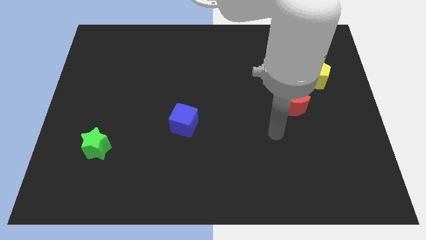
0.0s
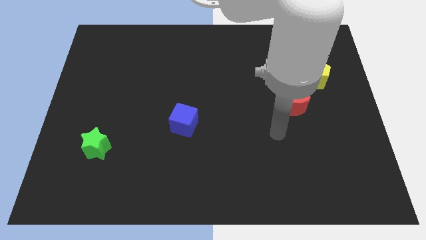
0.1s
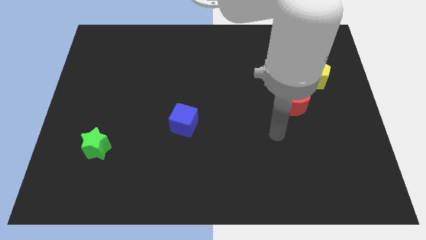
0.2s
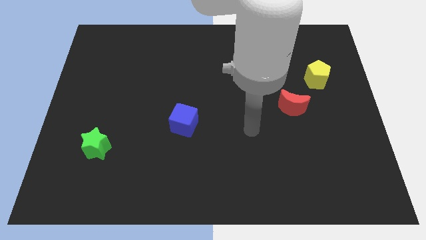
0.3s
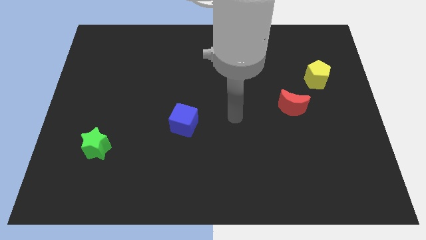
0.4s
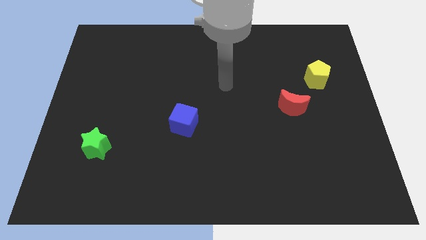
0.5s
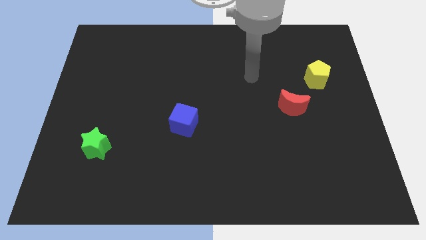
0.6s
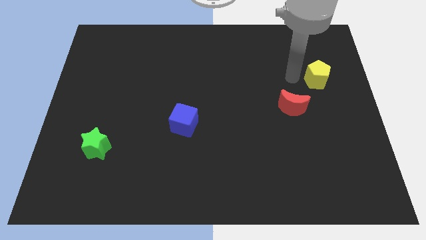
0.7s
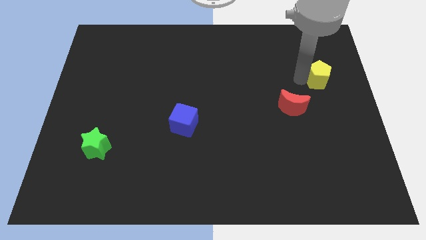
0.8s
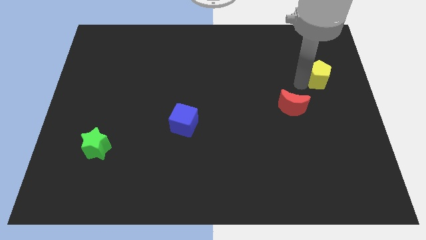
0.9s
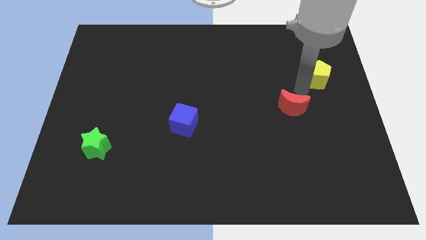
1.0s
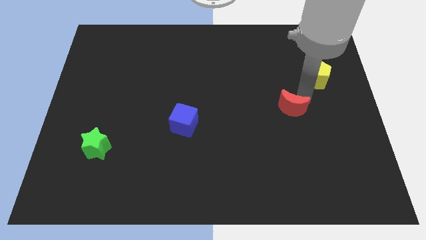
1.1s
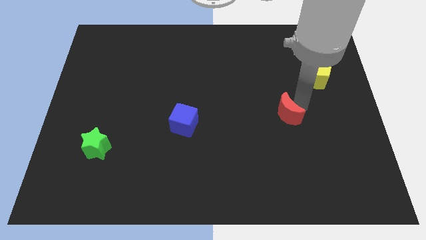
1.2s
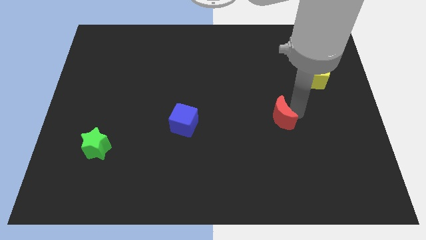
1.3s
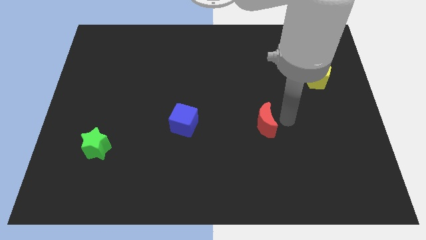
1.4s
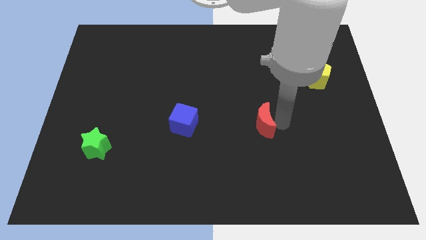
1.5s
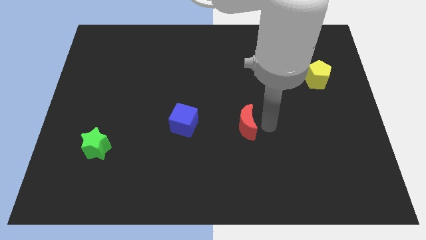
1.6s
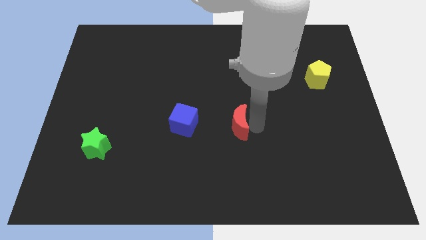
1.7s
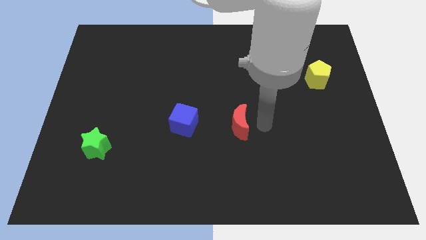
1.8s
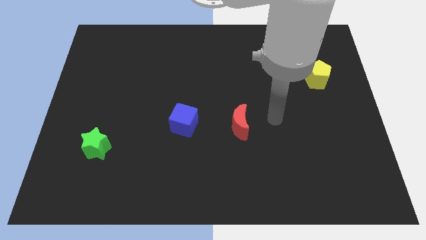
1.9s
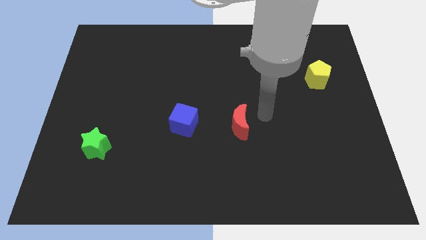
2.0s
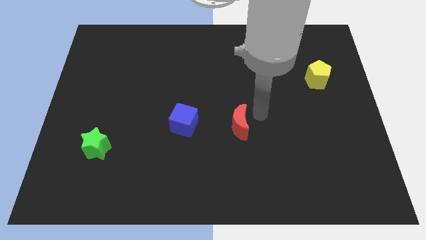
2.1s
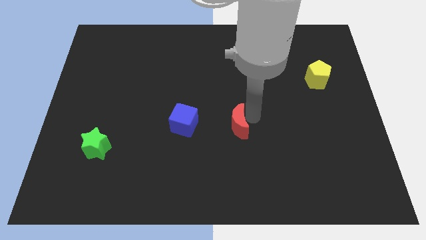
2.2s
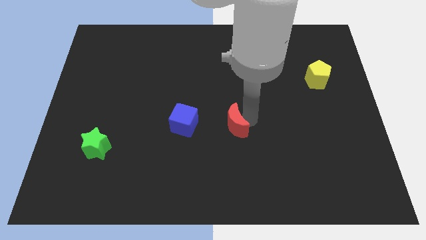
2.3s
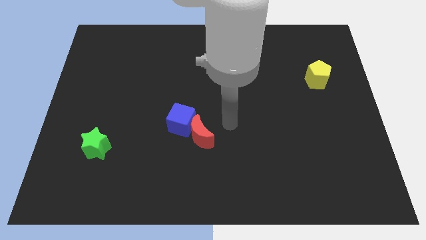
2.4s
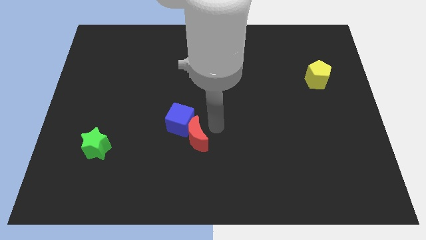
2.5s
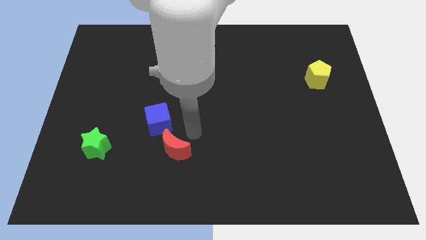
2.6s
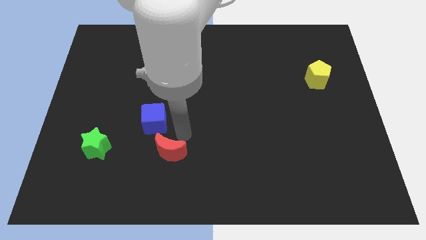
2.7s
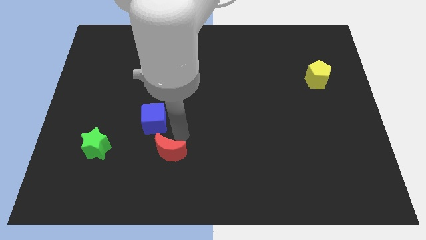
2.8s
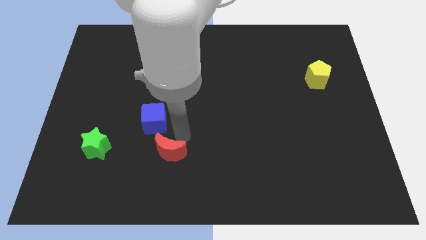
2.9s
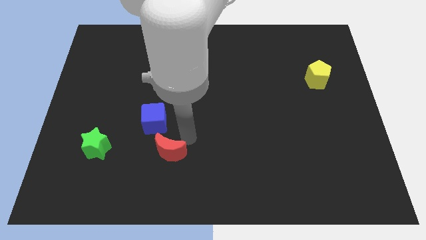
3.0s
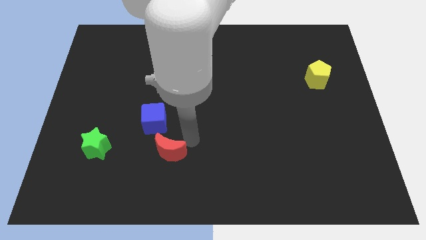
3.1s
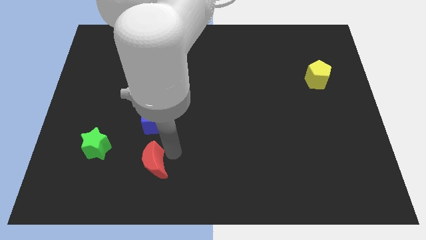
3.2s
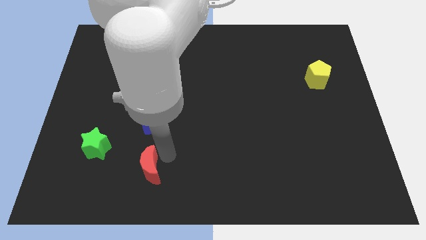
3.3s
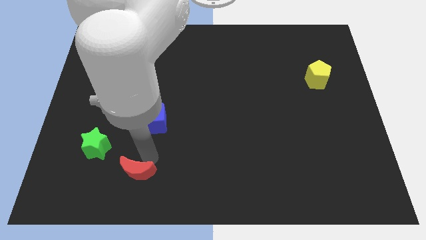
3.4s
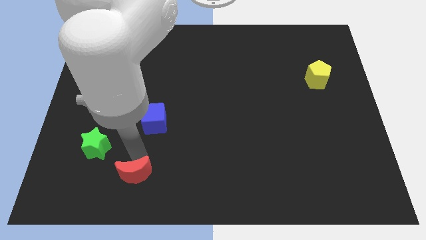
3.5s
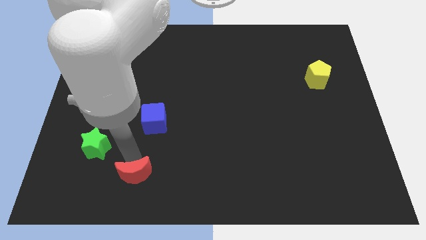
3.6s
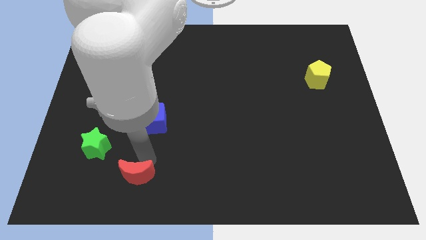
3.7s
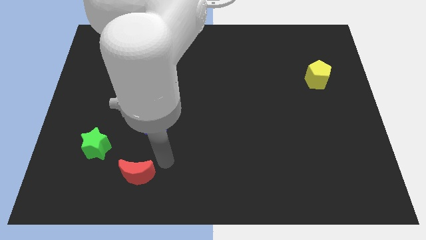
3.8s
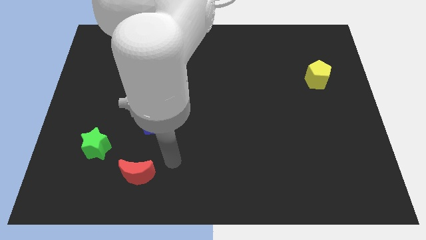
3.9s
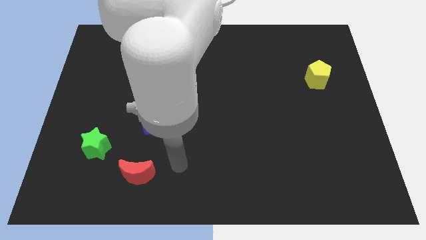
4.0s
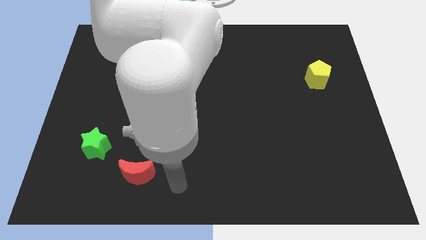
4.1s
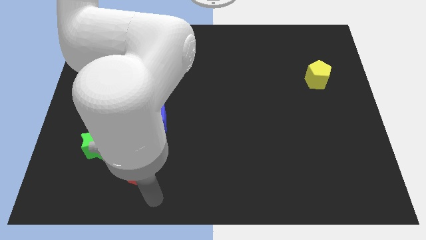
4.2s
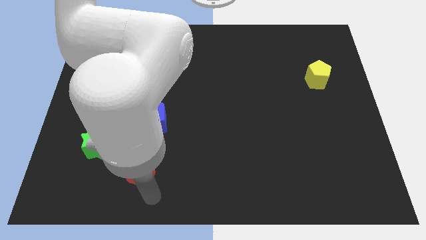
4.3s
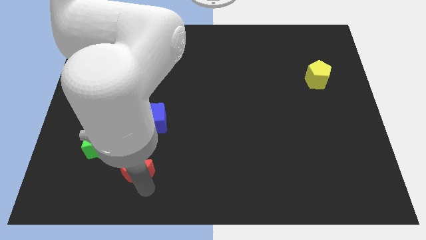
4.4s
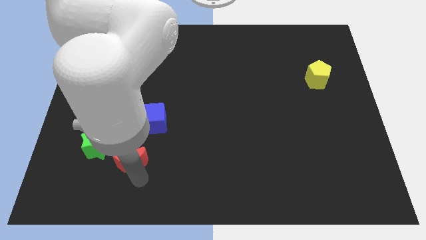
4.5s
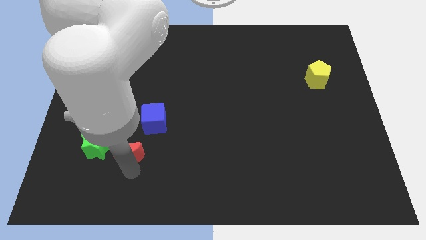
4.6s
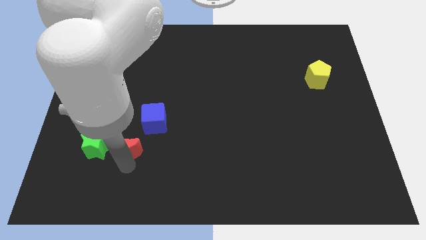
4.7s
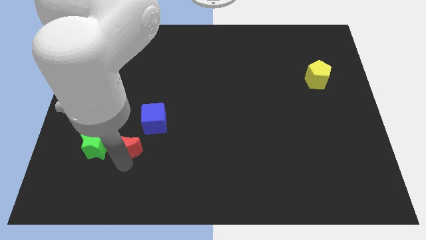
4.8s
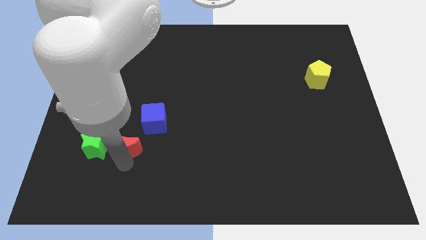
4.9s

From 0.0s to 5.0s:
slide the red moon towards the green block

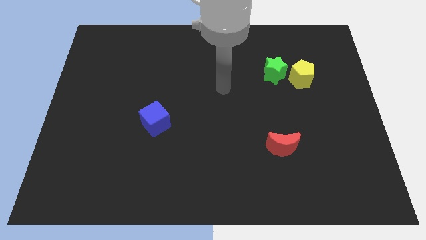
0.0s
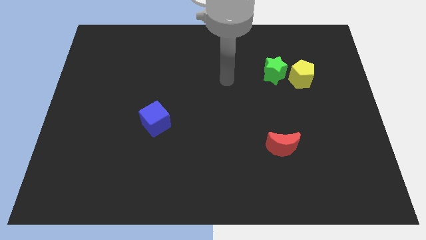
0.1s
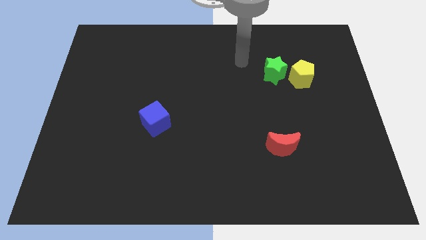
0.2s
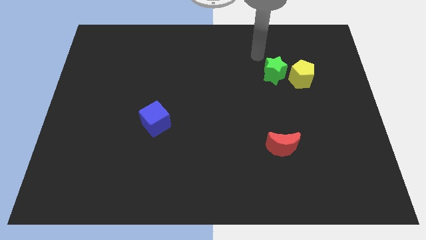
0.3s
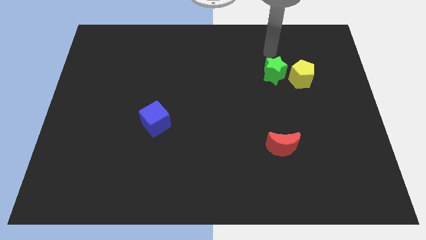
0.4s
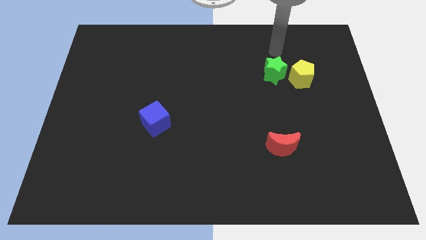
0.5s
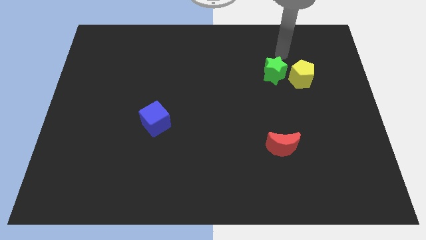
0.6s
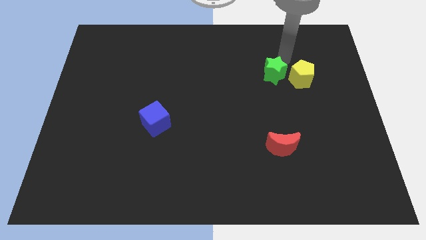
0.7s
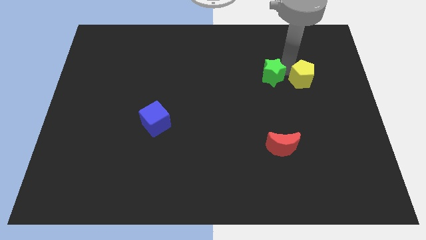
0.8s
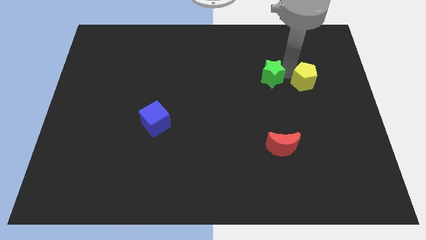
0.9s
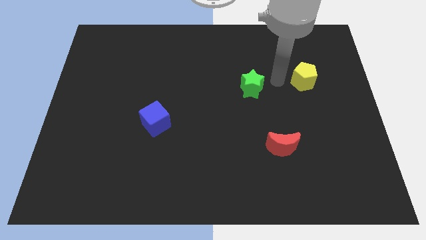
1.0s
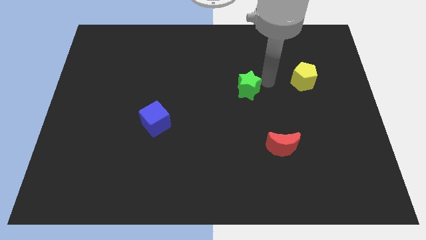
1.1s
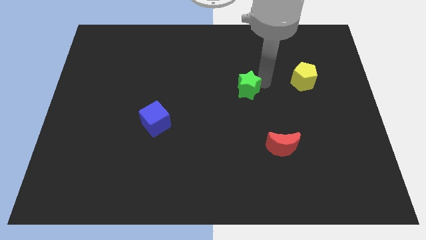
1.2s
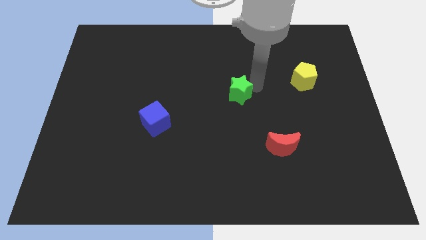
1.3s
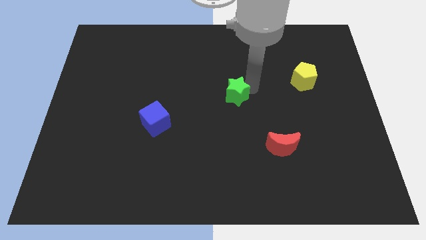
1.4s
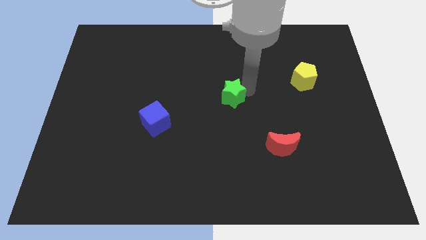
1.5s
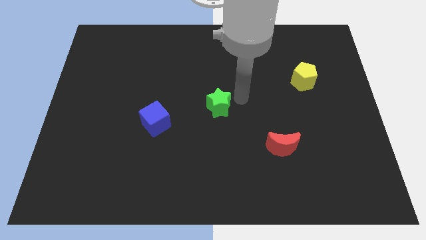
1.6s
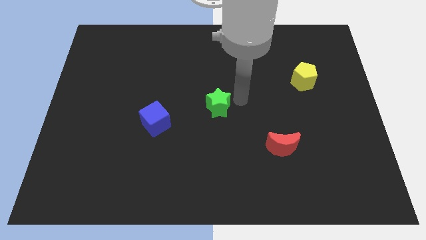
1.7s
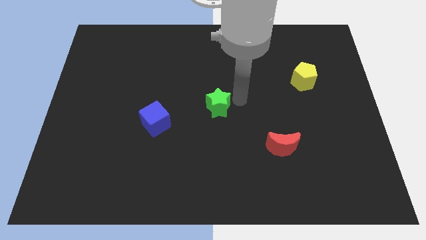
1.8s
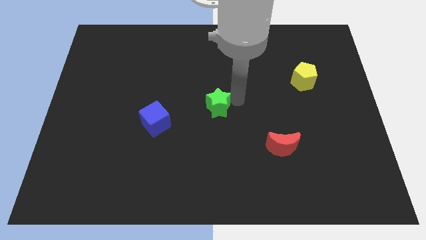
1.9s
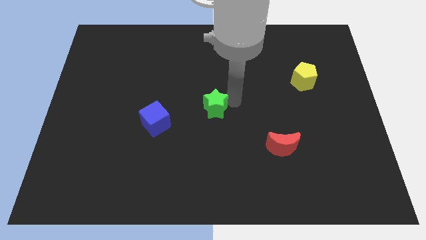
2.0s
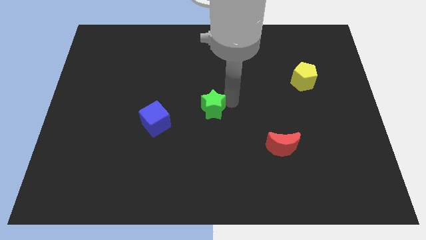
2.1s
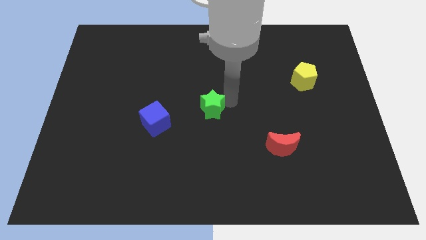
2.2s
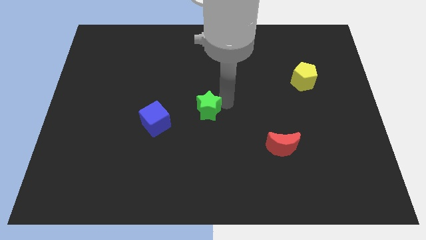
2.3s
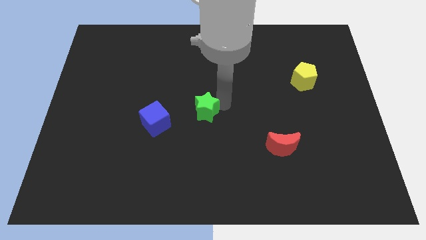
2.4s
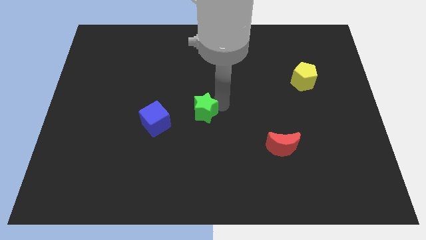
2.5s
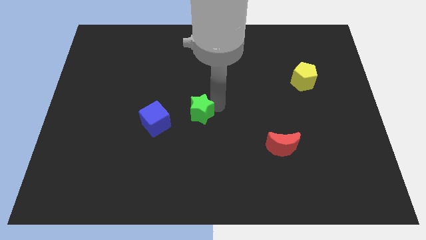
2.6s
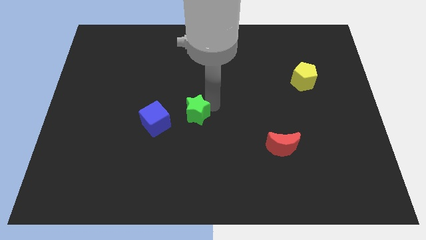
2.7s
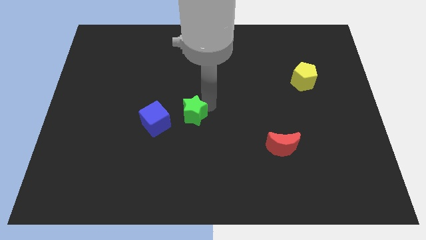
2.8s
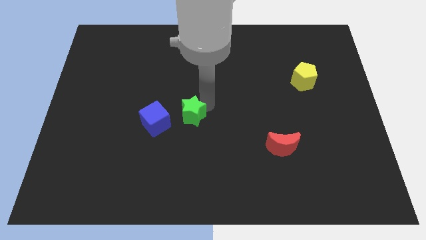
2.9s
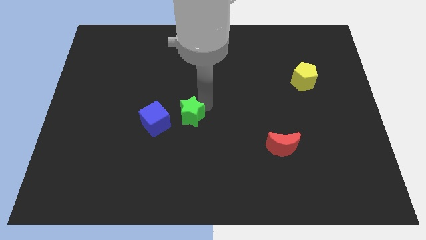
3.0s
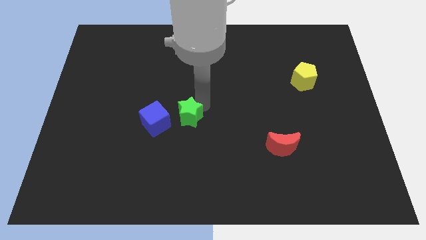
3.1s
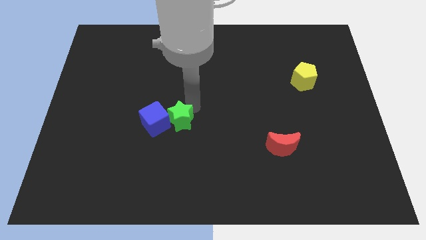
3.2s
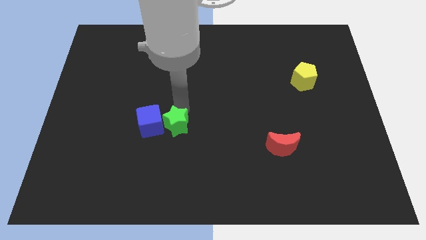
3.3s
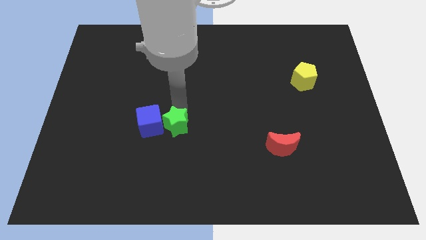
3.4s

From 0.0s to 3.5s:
push the green block to the cube

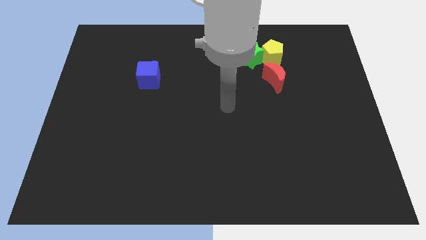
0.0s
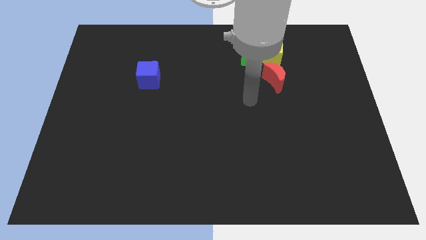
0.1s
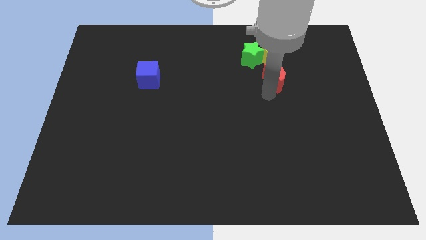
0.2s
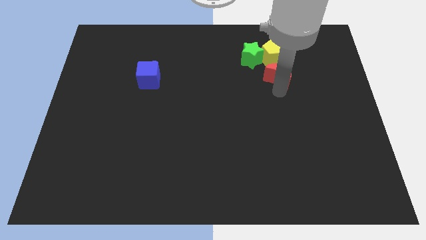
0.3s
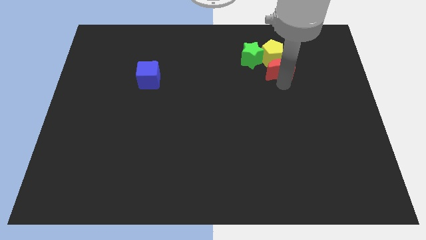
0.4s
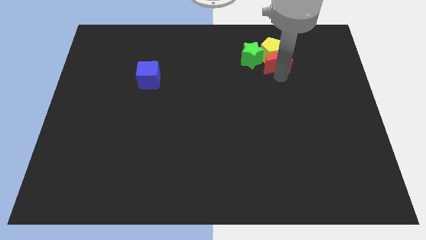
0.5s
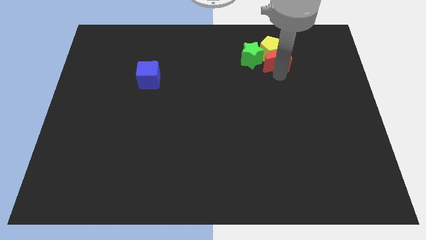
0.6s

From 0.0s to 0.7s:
push the red block to the yellow pentagon
